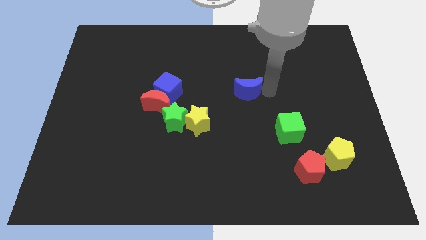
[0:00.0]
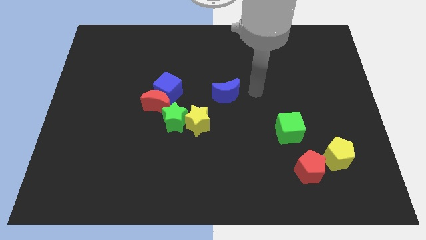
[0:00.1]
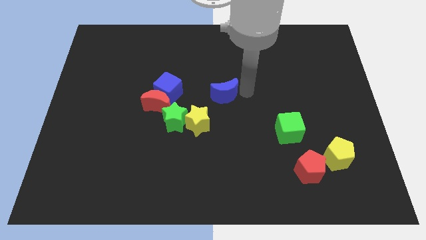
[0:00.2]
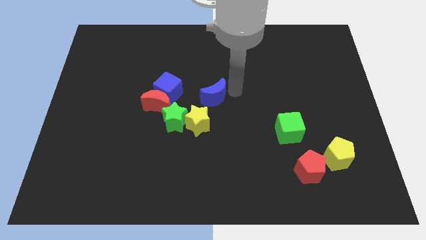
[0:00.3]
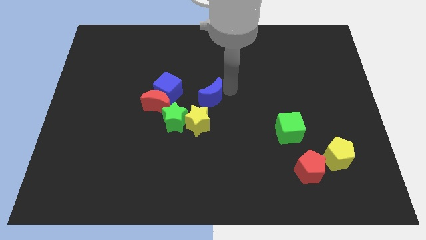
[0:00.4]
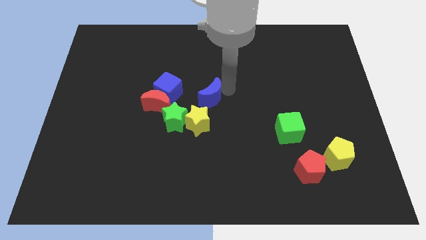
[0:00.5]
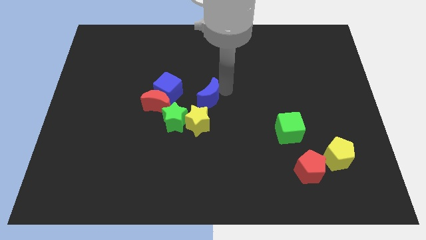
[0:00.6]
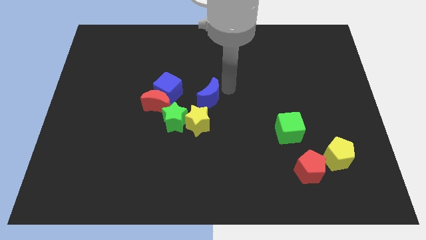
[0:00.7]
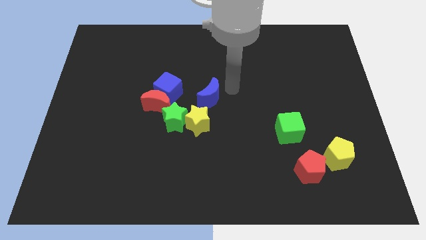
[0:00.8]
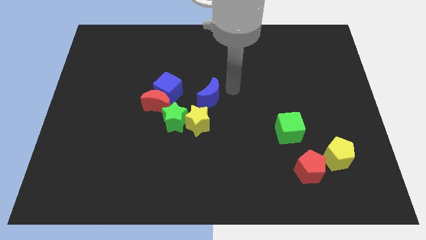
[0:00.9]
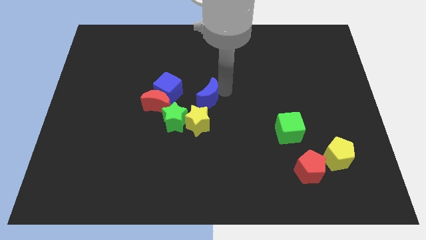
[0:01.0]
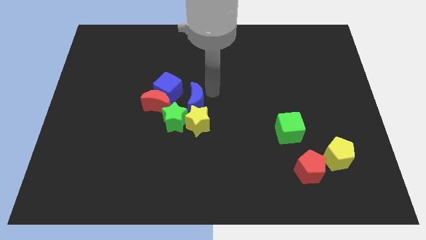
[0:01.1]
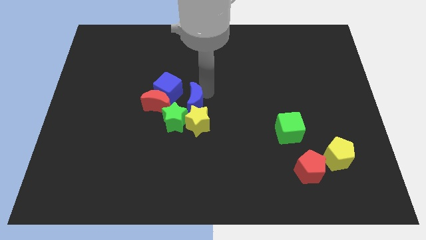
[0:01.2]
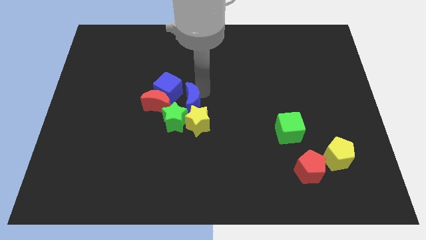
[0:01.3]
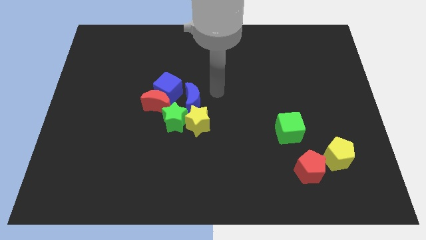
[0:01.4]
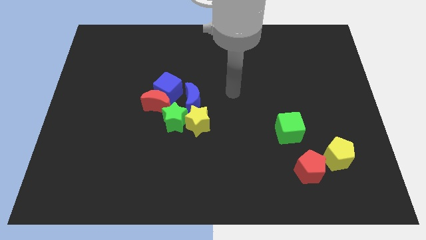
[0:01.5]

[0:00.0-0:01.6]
move the blue cube into the group of blocks

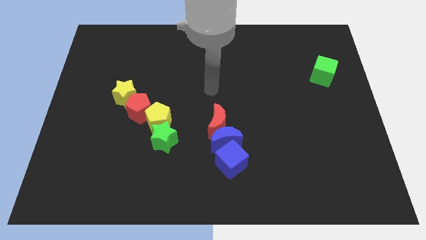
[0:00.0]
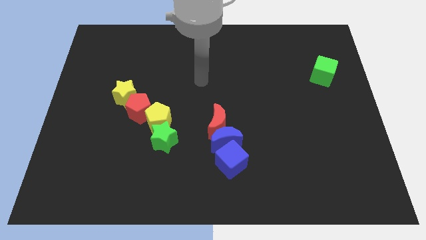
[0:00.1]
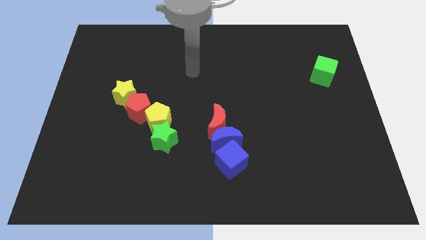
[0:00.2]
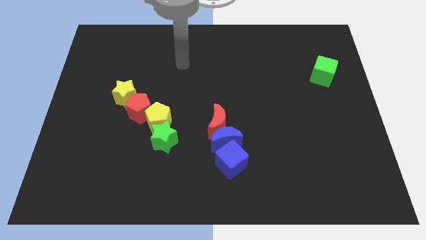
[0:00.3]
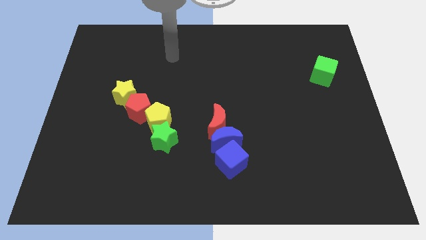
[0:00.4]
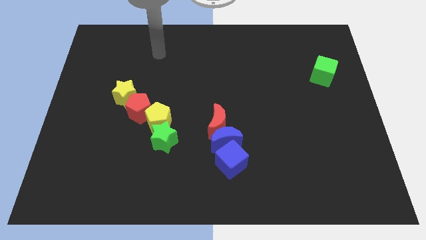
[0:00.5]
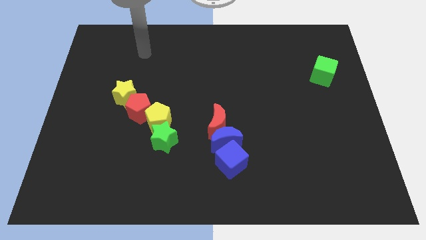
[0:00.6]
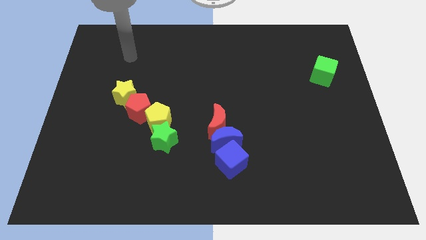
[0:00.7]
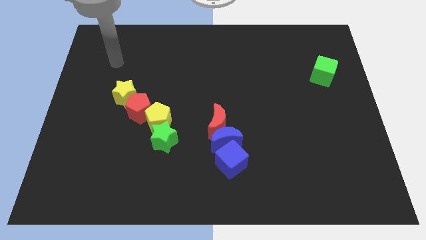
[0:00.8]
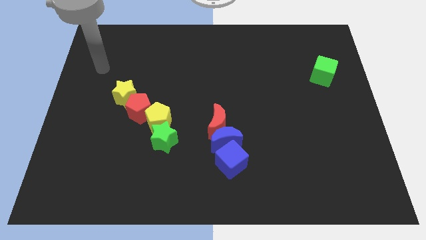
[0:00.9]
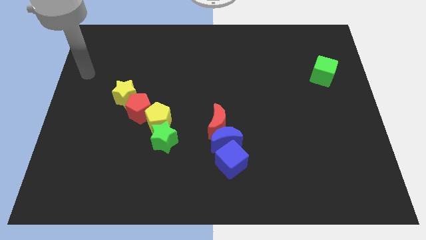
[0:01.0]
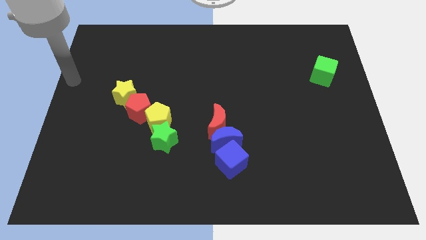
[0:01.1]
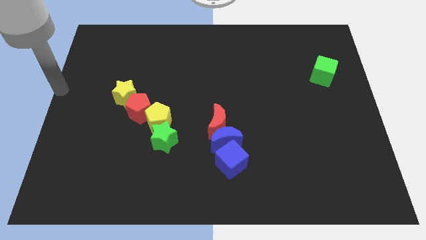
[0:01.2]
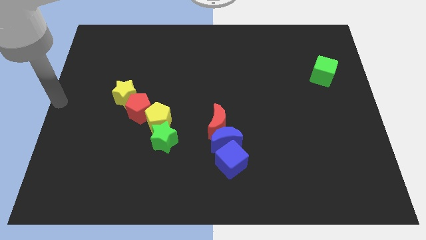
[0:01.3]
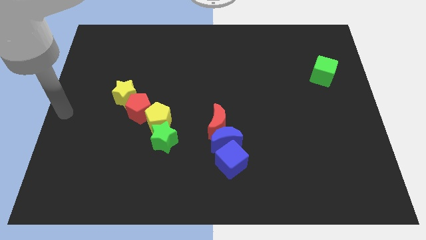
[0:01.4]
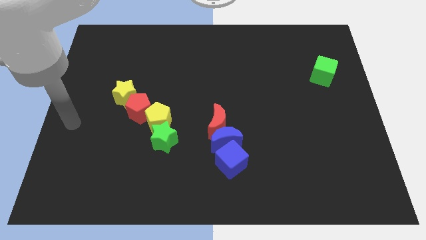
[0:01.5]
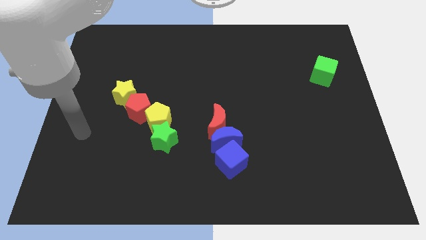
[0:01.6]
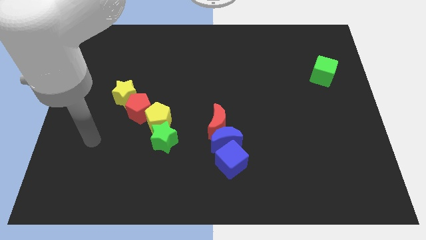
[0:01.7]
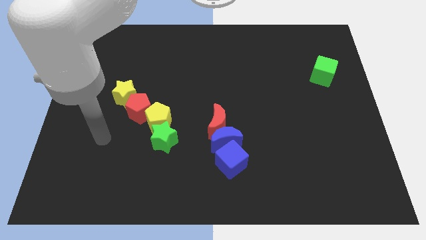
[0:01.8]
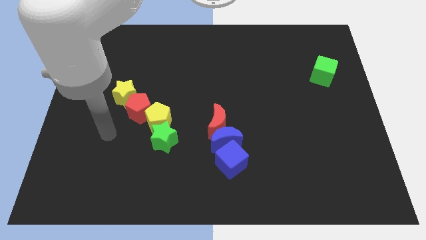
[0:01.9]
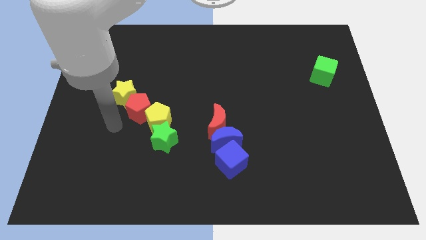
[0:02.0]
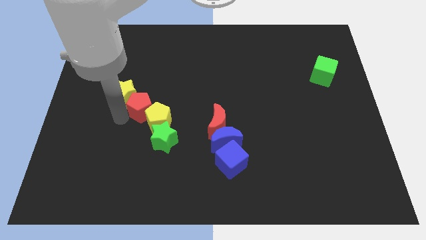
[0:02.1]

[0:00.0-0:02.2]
move your arm towards the red pentagon

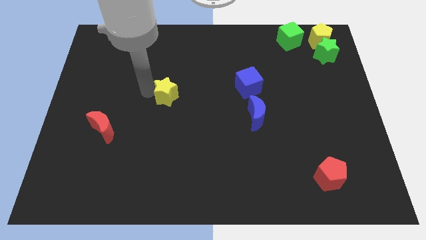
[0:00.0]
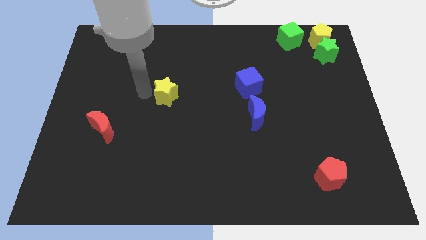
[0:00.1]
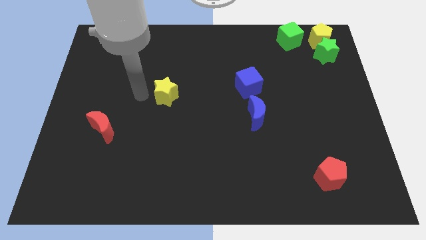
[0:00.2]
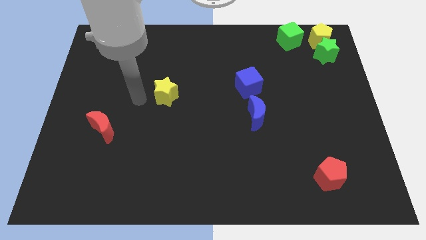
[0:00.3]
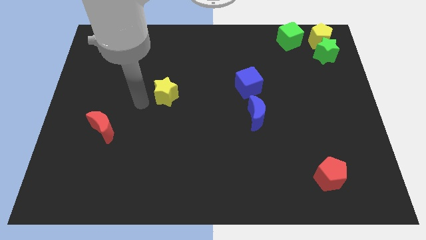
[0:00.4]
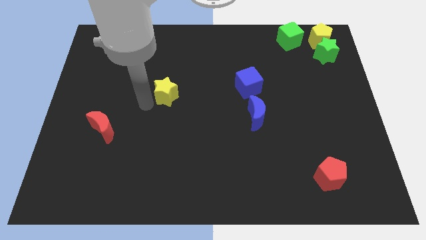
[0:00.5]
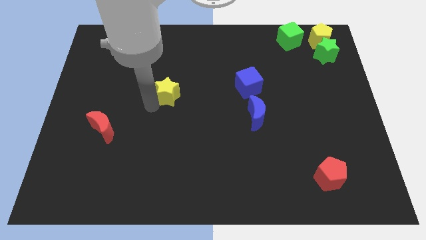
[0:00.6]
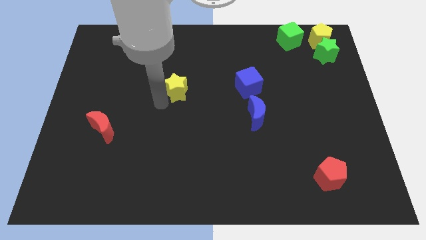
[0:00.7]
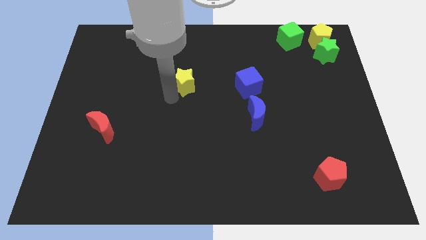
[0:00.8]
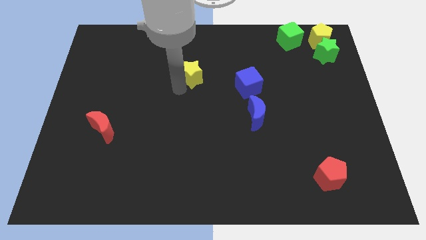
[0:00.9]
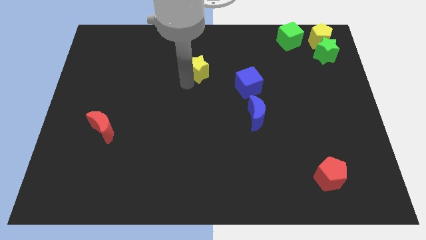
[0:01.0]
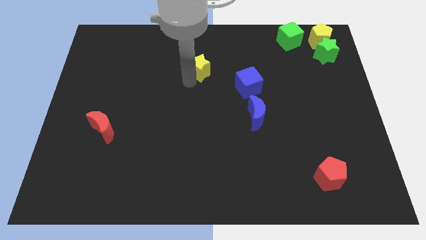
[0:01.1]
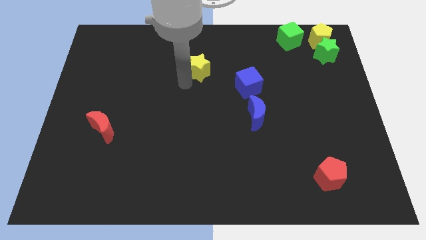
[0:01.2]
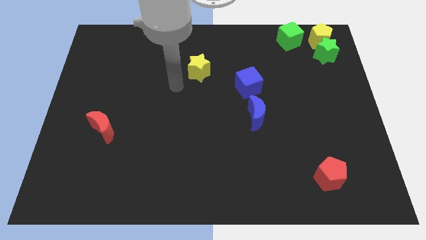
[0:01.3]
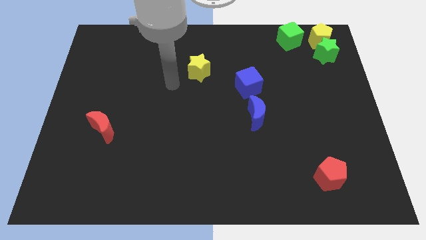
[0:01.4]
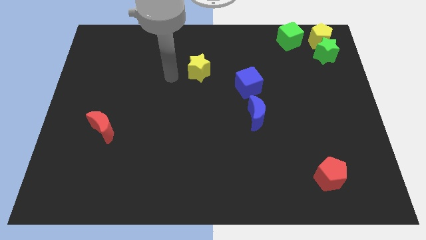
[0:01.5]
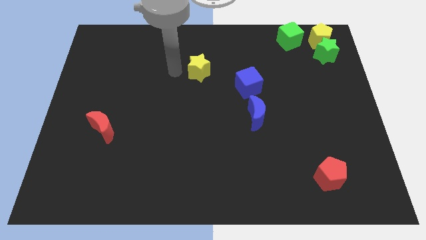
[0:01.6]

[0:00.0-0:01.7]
place the yellow star to the top left of the blue cube

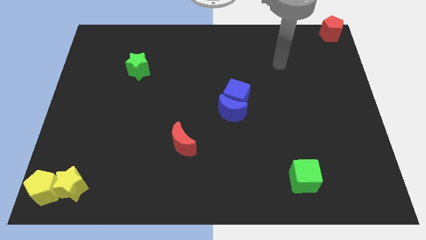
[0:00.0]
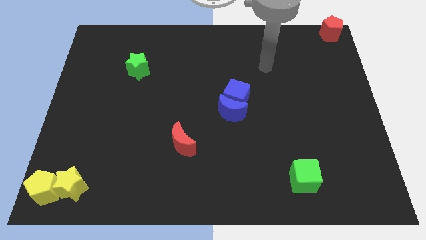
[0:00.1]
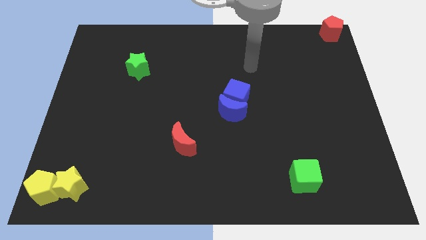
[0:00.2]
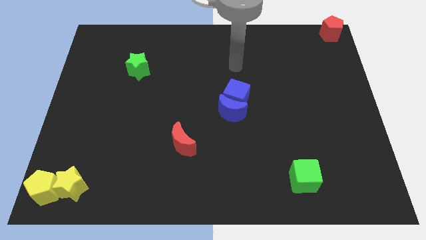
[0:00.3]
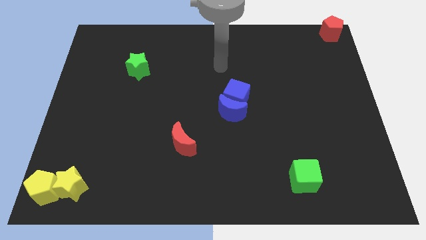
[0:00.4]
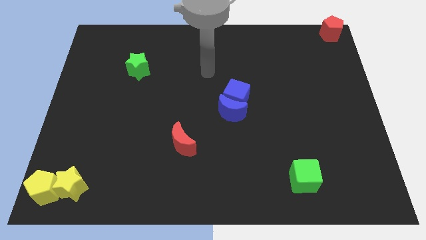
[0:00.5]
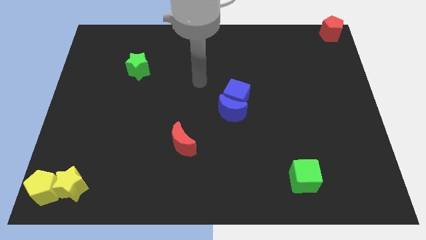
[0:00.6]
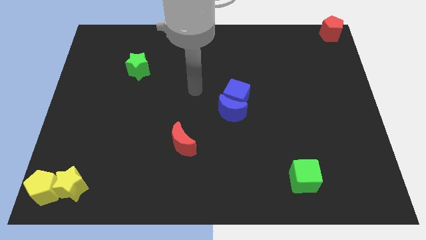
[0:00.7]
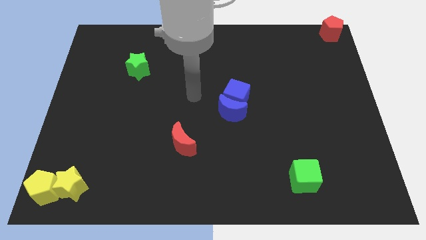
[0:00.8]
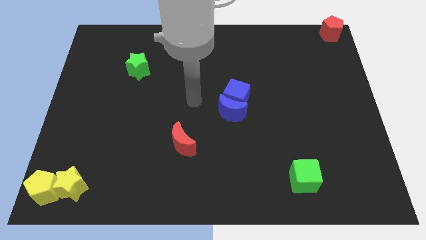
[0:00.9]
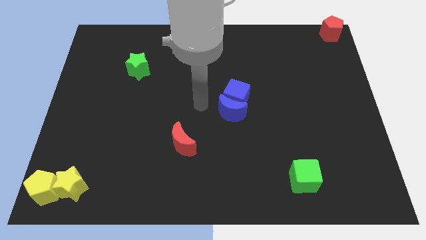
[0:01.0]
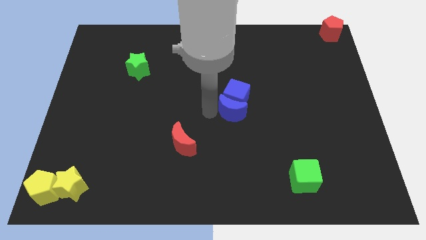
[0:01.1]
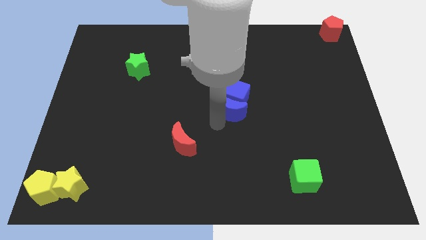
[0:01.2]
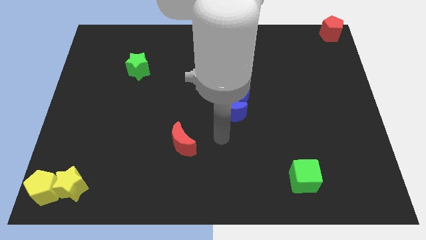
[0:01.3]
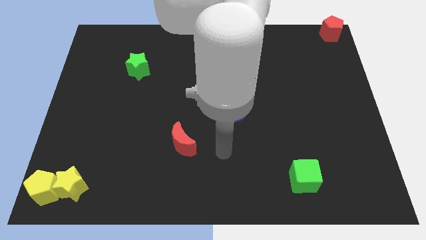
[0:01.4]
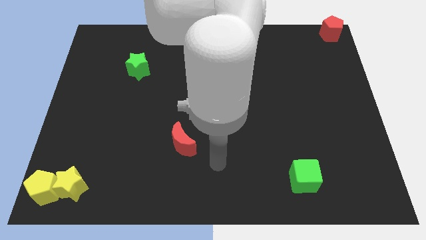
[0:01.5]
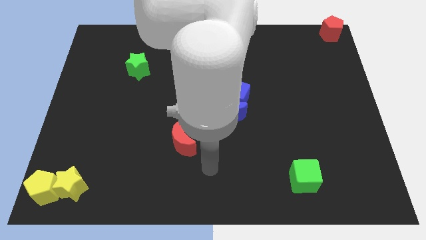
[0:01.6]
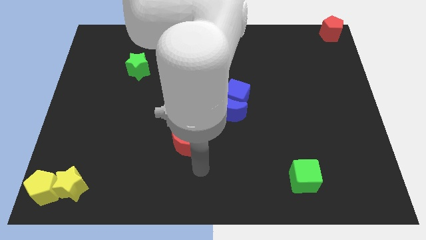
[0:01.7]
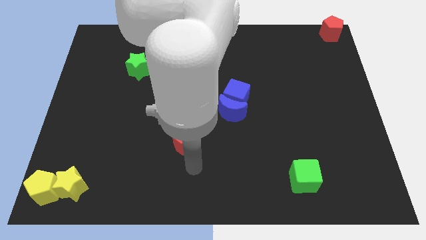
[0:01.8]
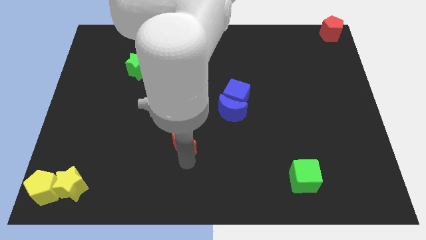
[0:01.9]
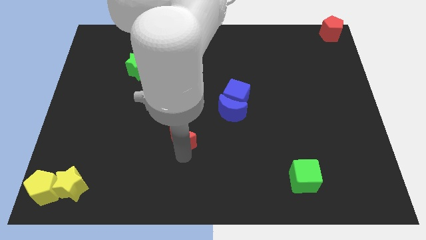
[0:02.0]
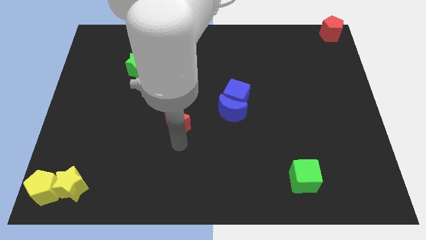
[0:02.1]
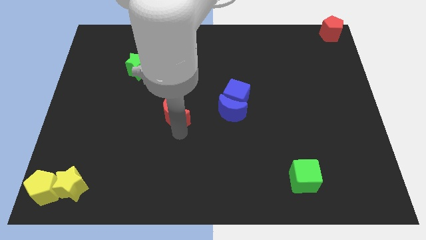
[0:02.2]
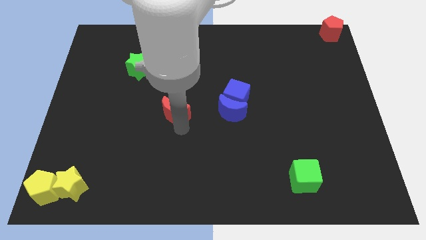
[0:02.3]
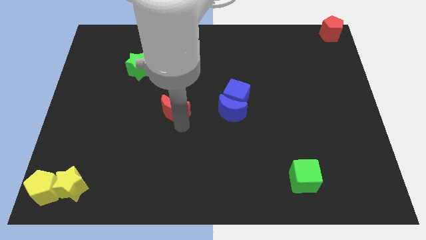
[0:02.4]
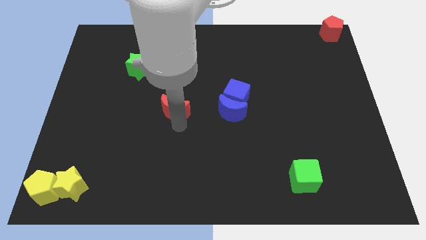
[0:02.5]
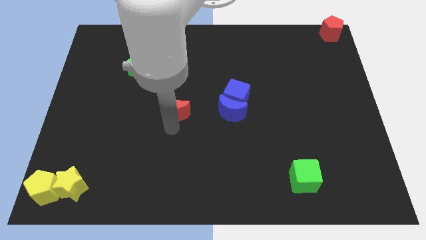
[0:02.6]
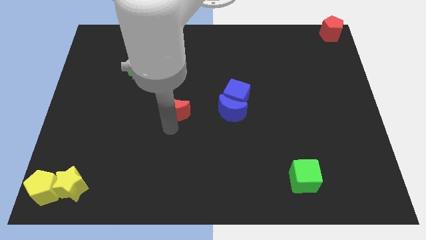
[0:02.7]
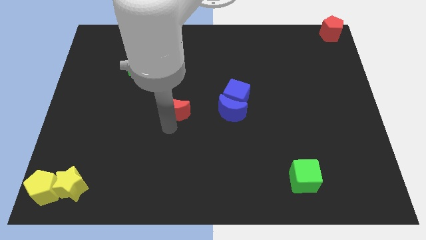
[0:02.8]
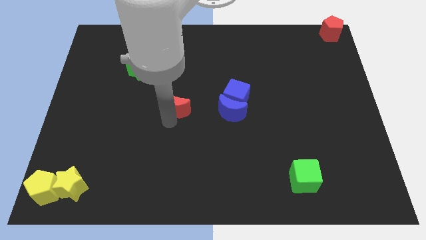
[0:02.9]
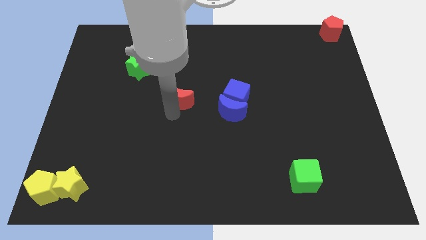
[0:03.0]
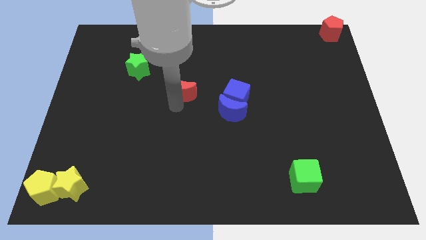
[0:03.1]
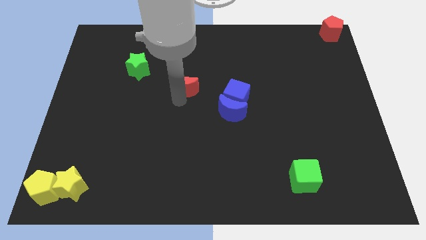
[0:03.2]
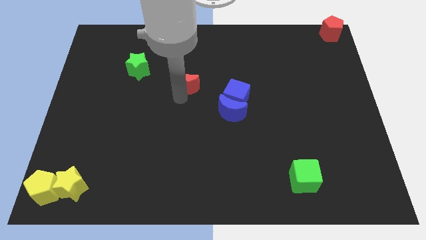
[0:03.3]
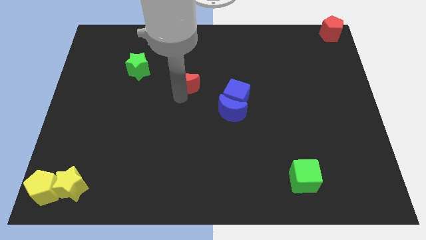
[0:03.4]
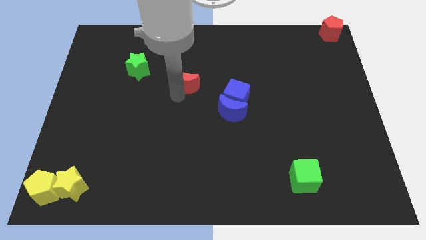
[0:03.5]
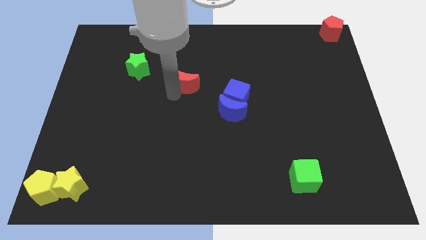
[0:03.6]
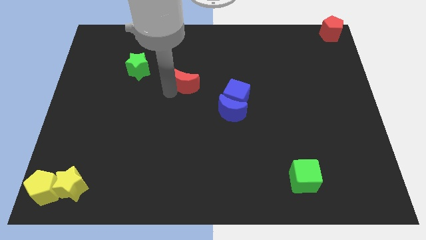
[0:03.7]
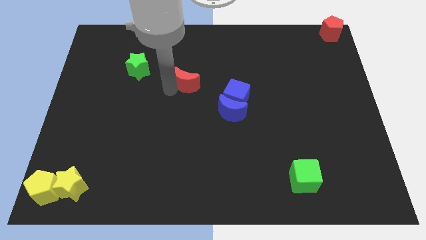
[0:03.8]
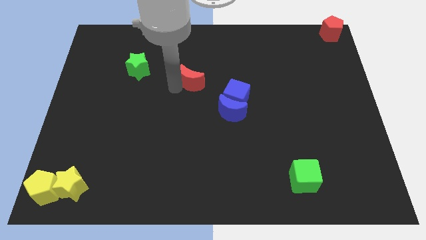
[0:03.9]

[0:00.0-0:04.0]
move the red crescent to the bottom right of the green star
